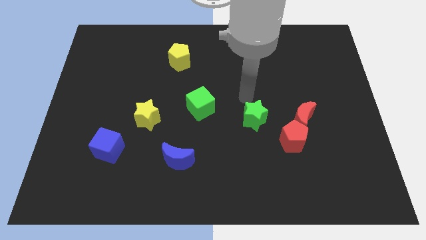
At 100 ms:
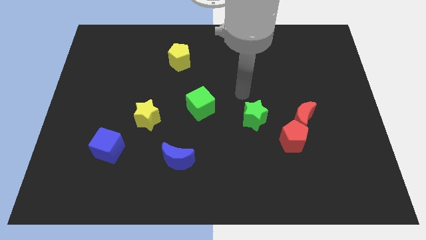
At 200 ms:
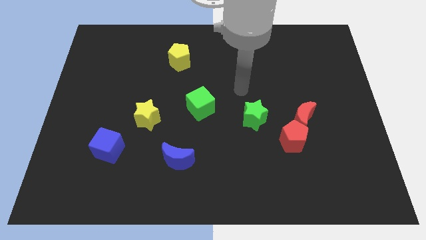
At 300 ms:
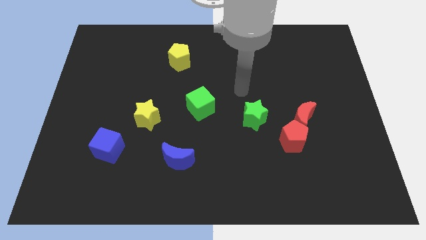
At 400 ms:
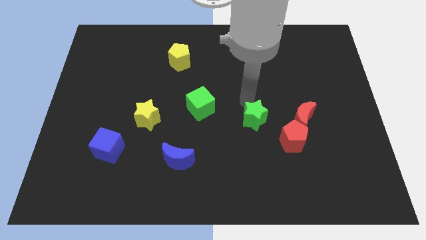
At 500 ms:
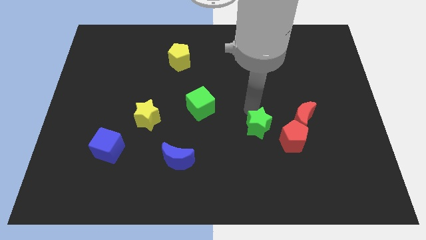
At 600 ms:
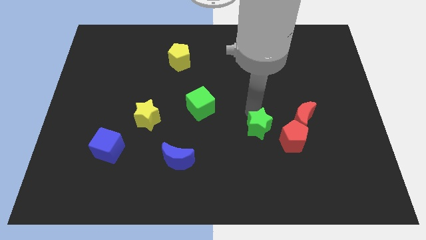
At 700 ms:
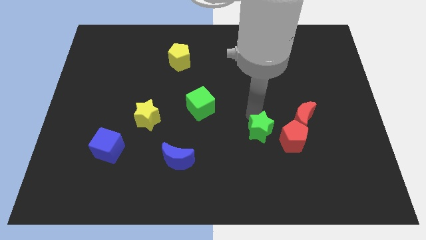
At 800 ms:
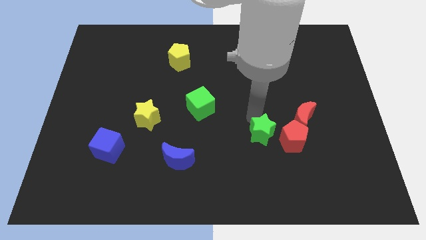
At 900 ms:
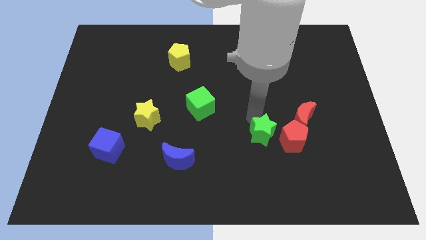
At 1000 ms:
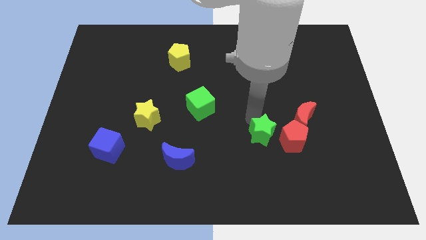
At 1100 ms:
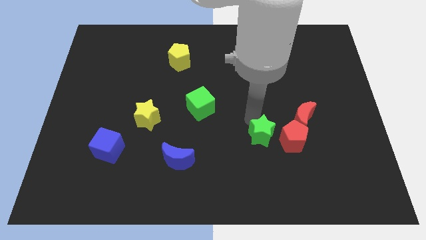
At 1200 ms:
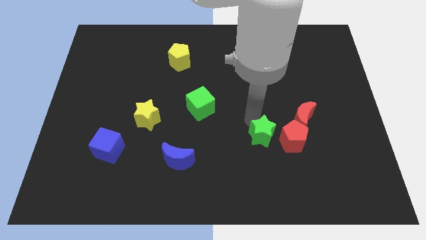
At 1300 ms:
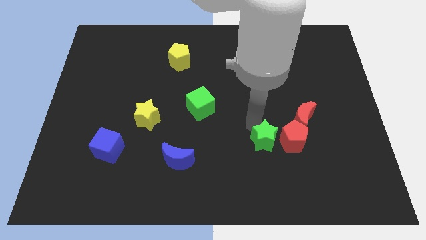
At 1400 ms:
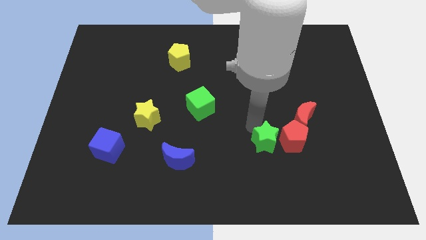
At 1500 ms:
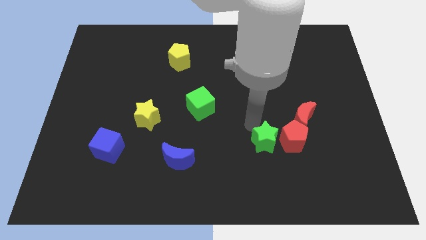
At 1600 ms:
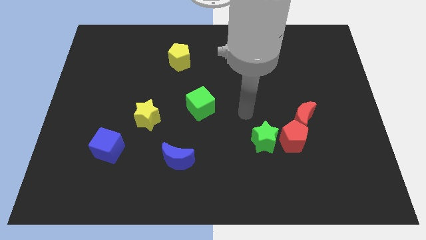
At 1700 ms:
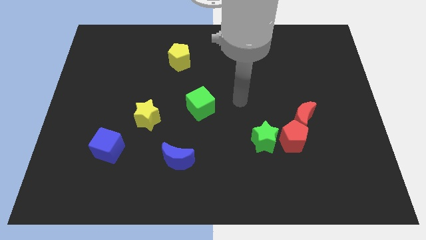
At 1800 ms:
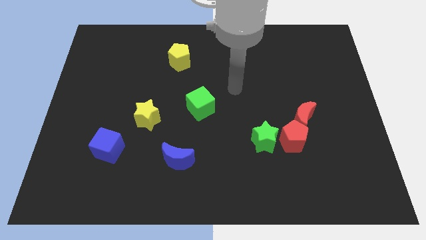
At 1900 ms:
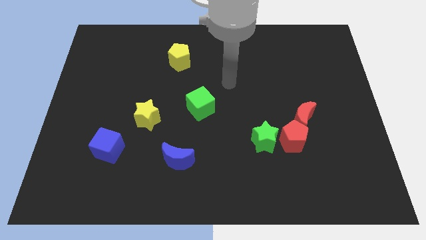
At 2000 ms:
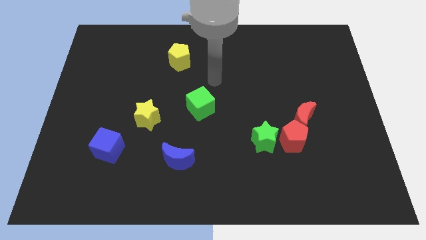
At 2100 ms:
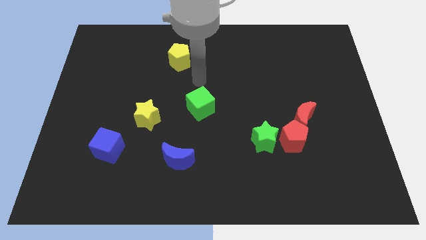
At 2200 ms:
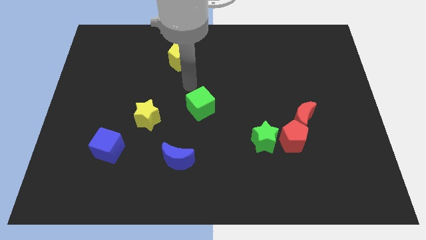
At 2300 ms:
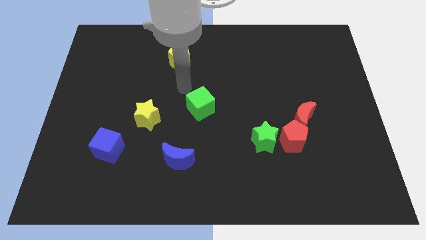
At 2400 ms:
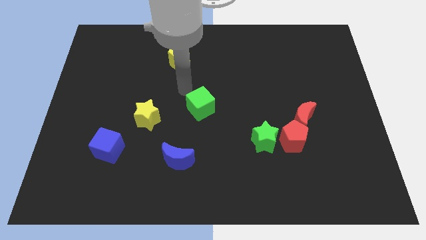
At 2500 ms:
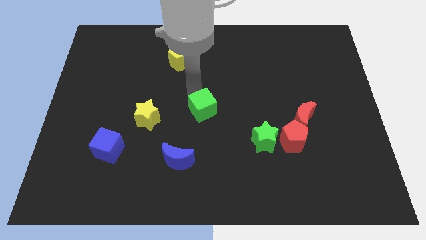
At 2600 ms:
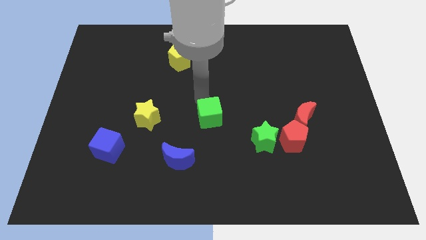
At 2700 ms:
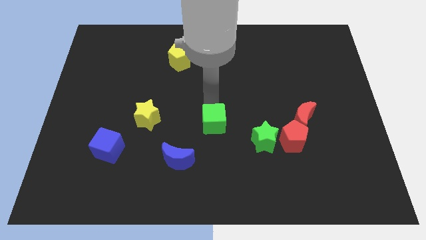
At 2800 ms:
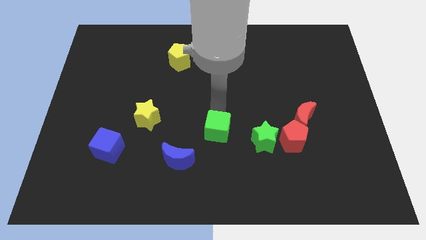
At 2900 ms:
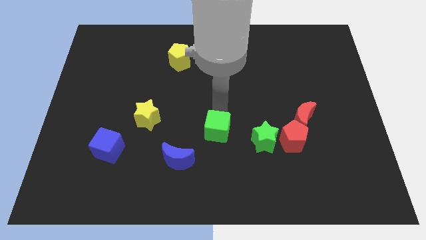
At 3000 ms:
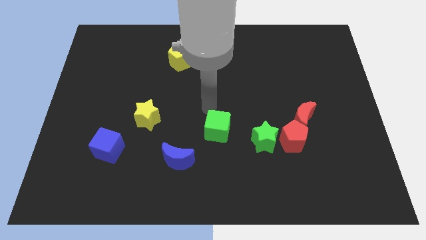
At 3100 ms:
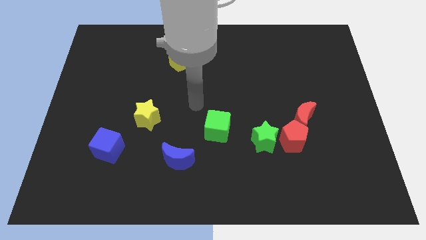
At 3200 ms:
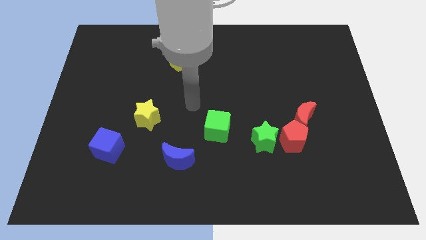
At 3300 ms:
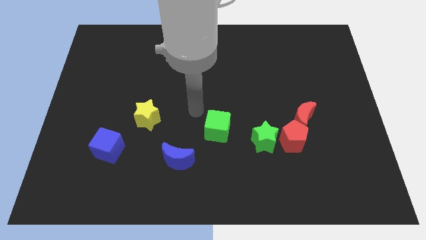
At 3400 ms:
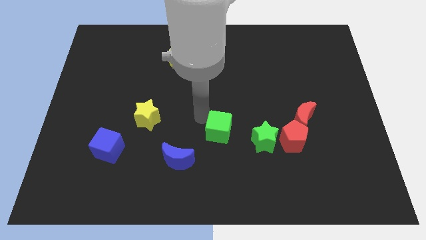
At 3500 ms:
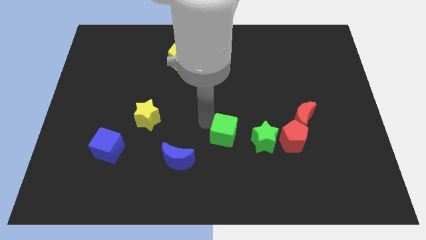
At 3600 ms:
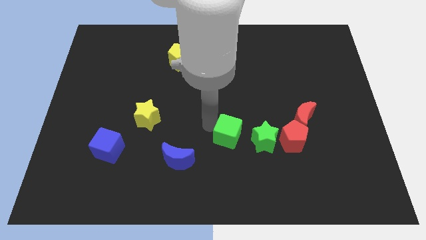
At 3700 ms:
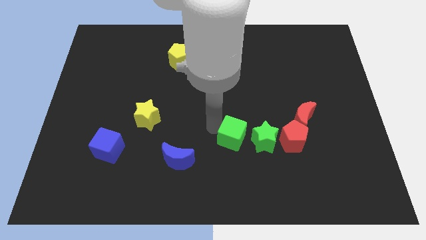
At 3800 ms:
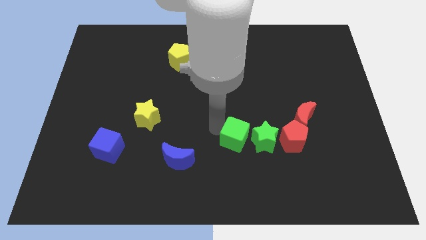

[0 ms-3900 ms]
place the green star left to the red pentagon

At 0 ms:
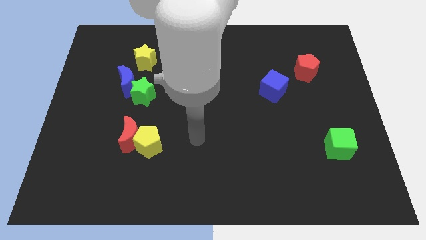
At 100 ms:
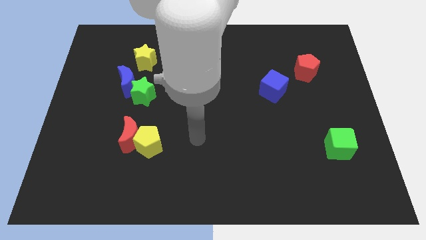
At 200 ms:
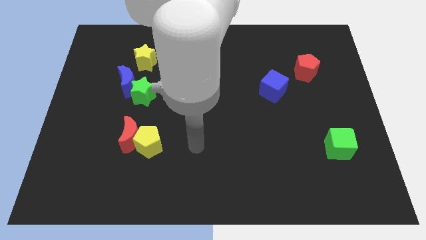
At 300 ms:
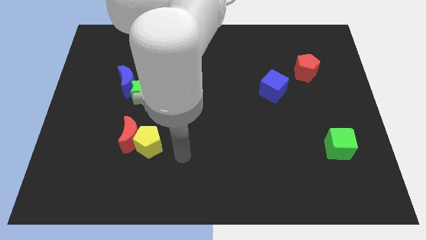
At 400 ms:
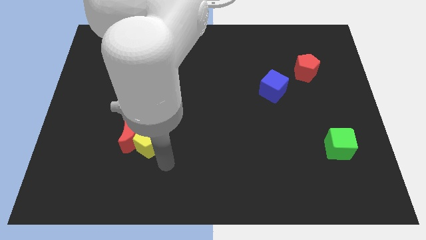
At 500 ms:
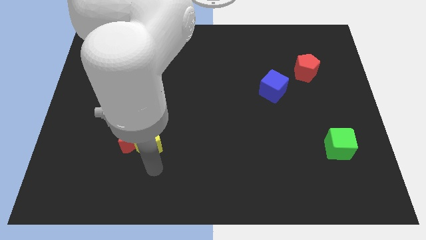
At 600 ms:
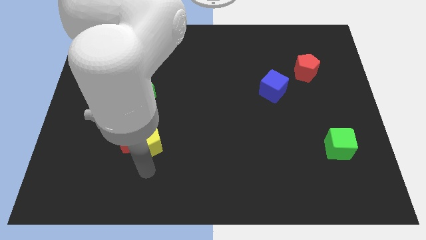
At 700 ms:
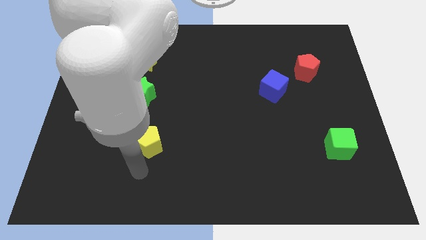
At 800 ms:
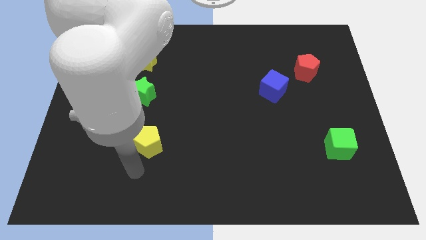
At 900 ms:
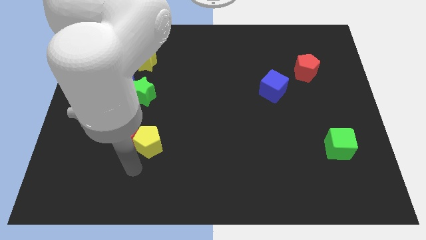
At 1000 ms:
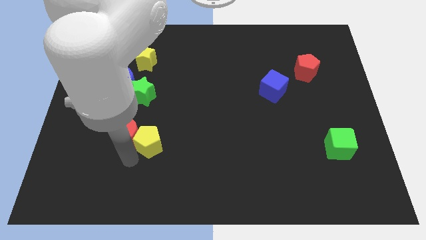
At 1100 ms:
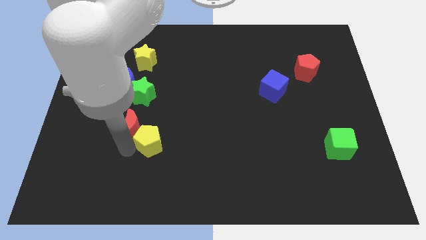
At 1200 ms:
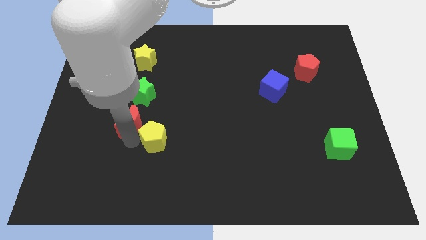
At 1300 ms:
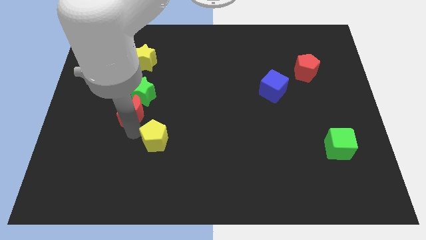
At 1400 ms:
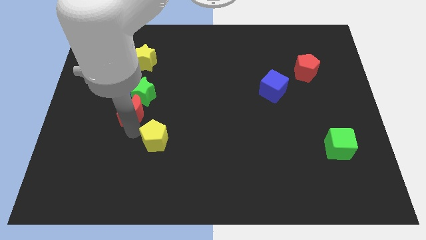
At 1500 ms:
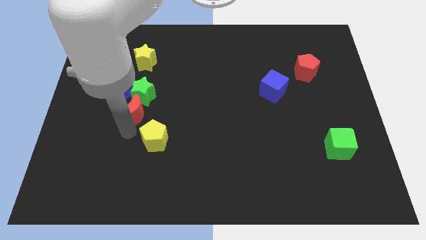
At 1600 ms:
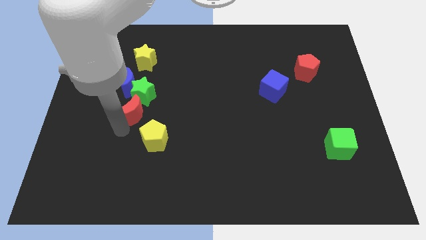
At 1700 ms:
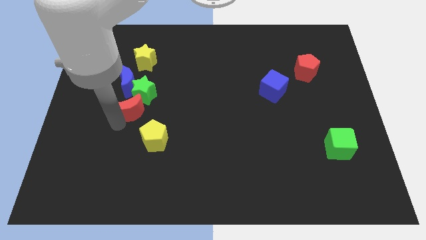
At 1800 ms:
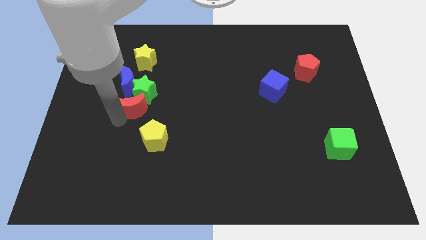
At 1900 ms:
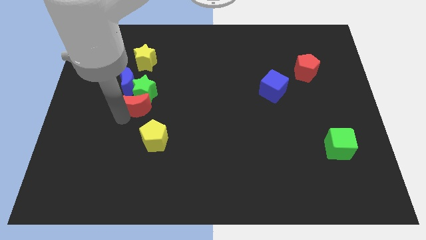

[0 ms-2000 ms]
push the red moon towards the bottom of the green star

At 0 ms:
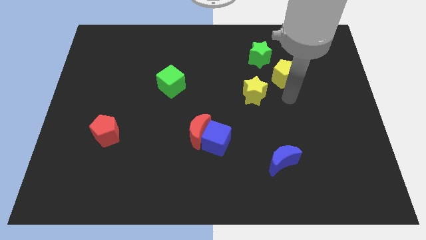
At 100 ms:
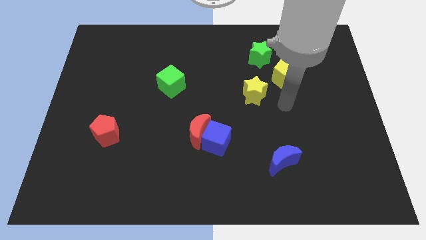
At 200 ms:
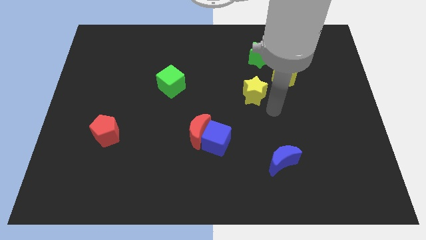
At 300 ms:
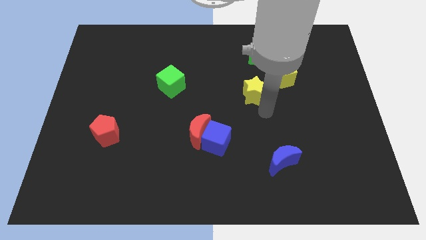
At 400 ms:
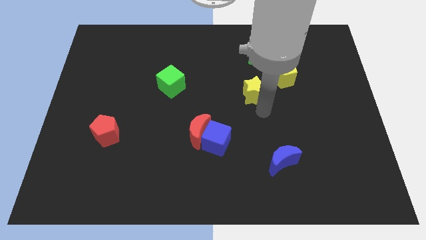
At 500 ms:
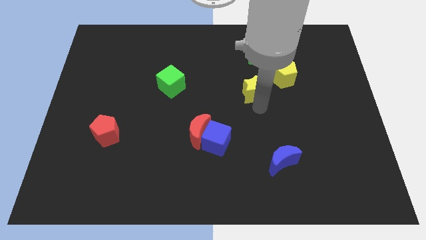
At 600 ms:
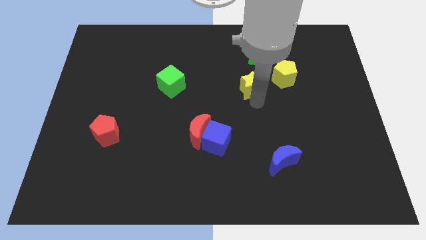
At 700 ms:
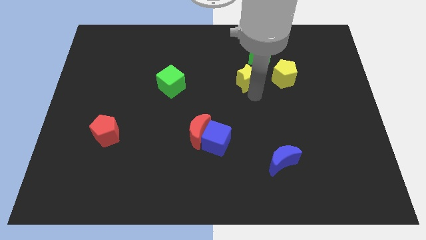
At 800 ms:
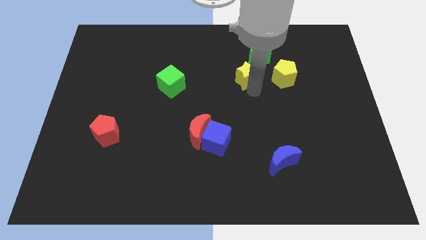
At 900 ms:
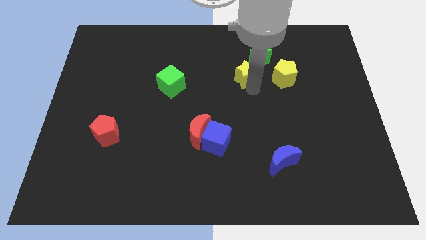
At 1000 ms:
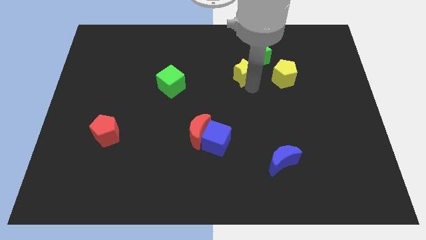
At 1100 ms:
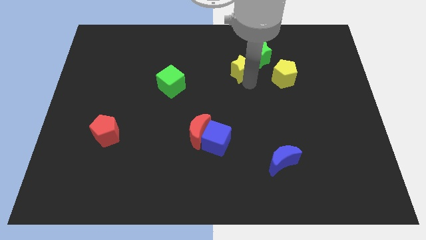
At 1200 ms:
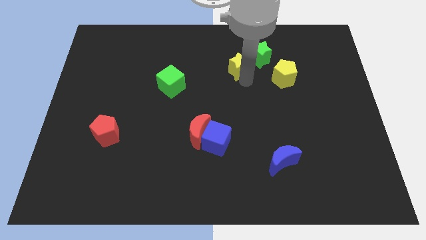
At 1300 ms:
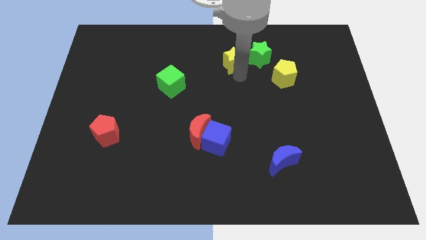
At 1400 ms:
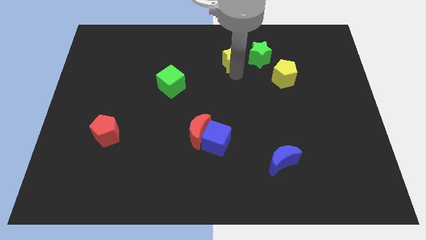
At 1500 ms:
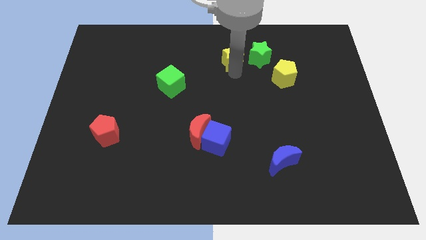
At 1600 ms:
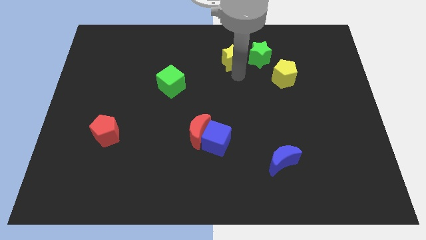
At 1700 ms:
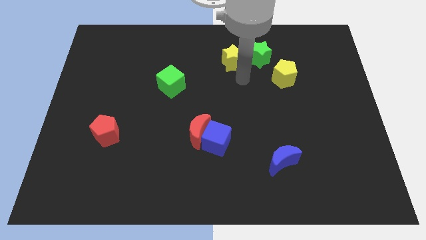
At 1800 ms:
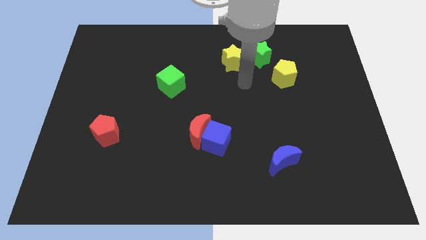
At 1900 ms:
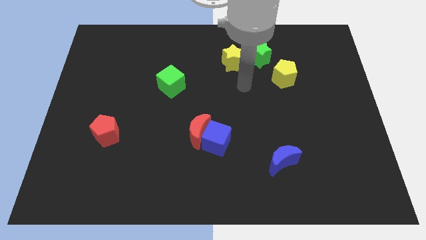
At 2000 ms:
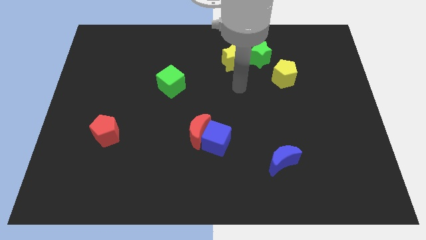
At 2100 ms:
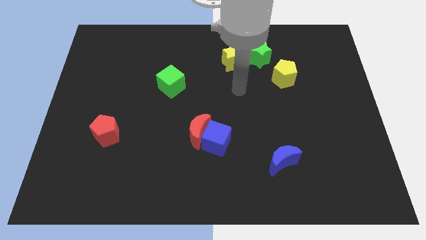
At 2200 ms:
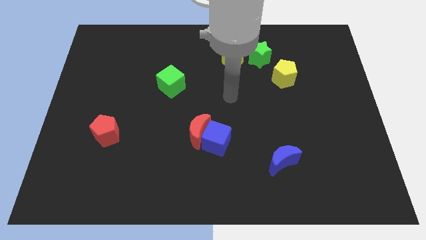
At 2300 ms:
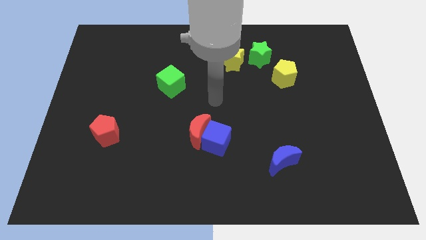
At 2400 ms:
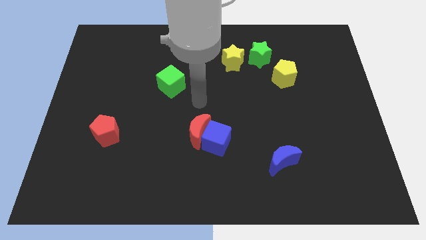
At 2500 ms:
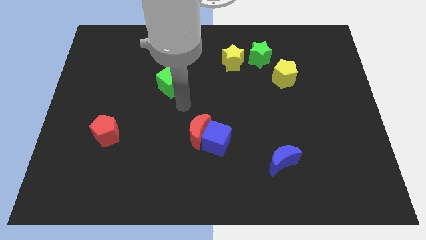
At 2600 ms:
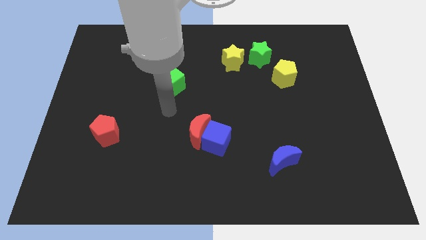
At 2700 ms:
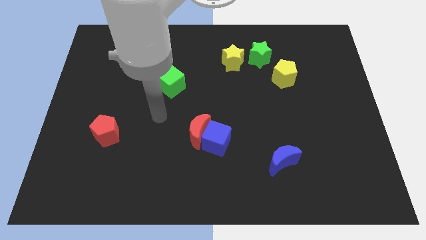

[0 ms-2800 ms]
move the yellow star beside green star

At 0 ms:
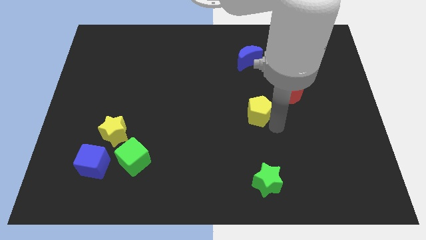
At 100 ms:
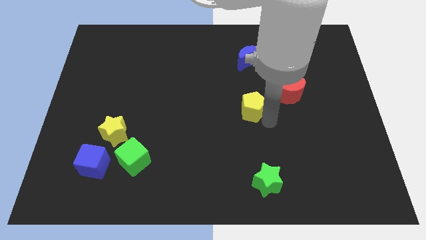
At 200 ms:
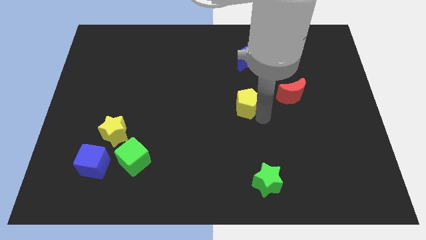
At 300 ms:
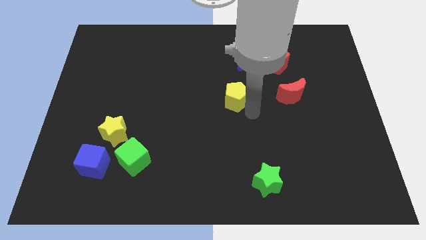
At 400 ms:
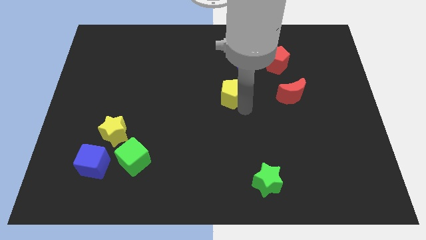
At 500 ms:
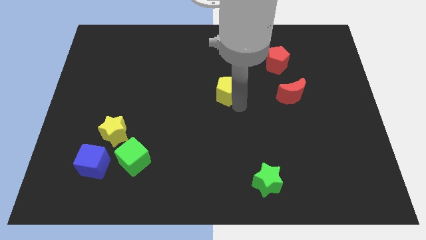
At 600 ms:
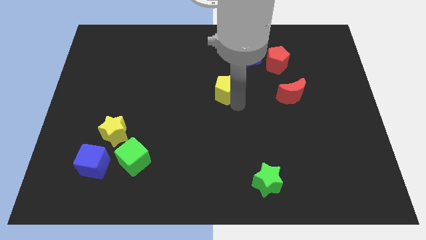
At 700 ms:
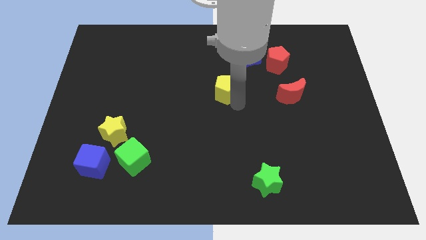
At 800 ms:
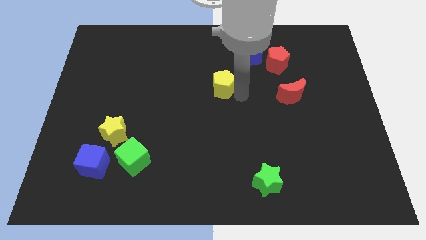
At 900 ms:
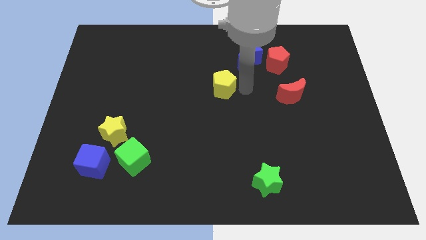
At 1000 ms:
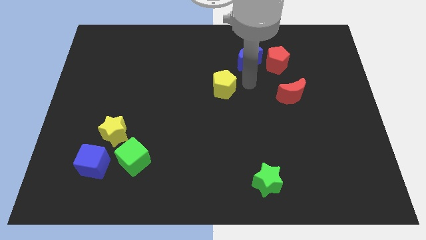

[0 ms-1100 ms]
move the yellow pentagon to the center of the board
